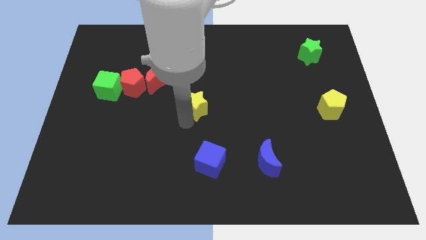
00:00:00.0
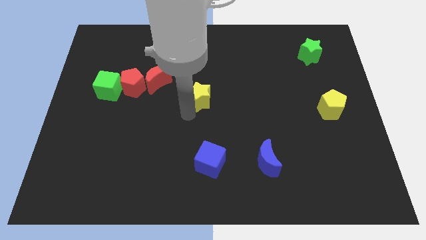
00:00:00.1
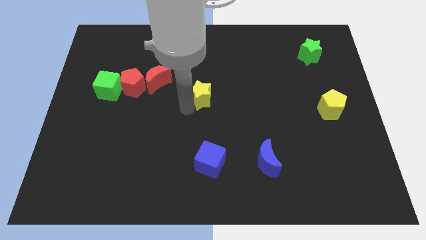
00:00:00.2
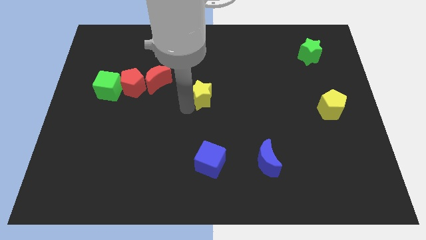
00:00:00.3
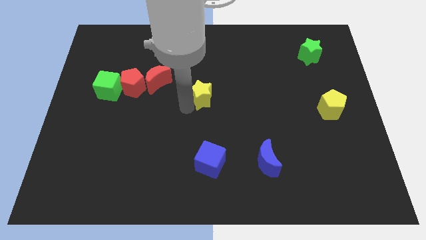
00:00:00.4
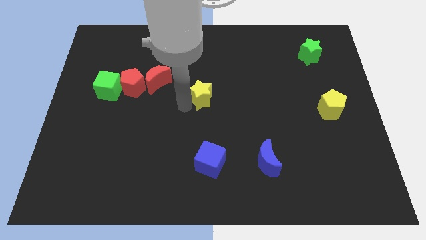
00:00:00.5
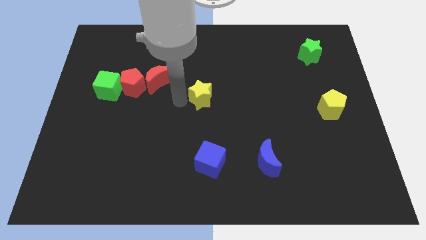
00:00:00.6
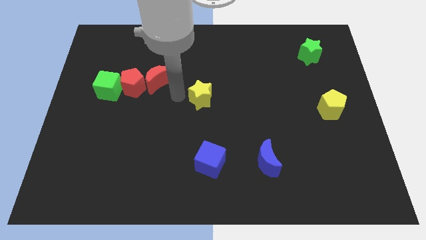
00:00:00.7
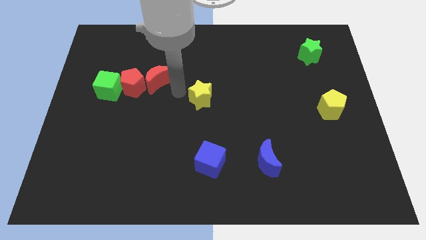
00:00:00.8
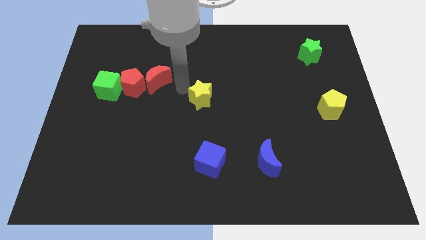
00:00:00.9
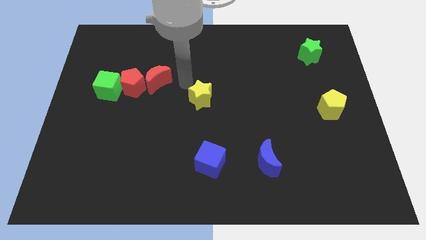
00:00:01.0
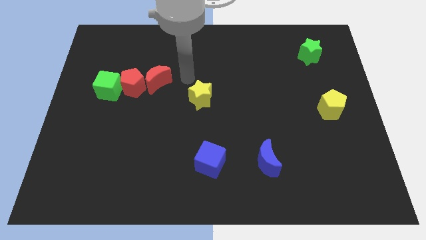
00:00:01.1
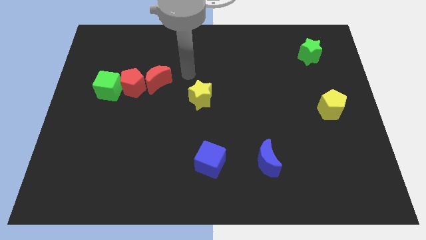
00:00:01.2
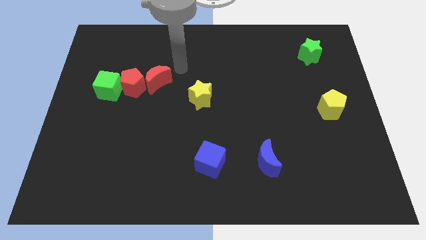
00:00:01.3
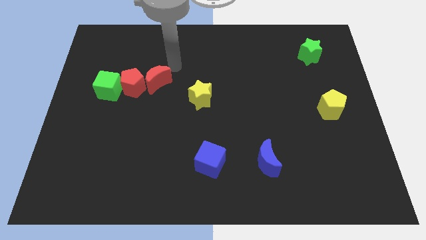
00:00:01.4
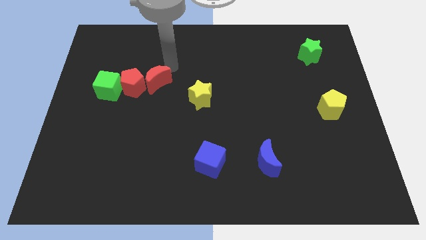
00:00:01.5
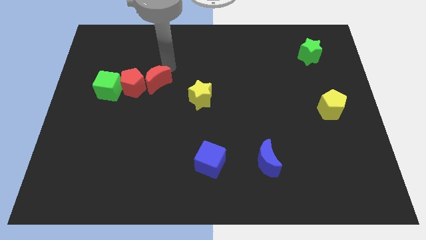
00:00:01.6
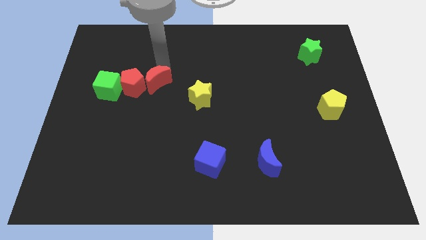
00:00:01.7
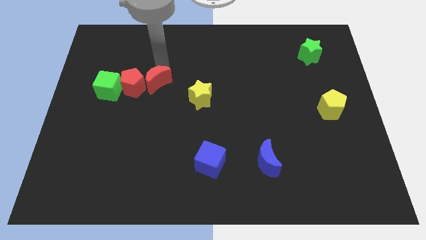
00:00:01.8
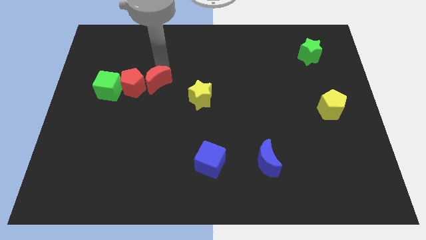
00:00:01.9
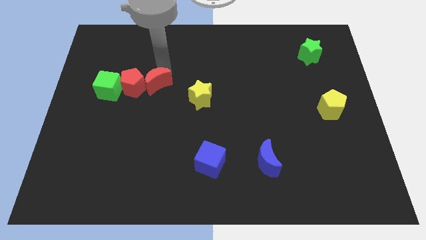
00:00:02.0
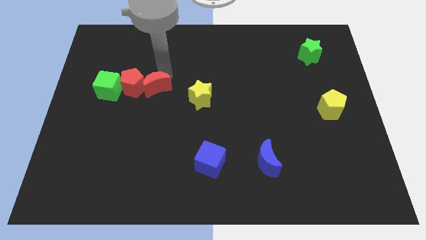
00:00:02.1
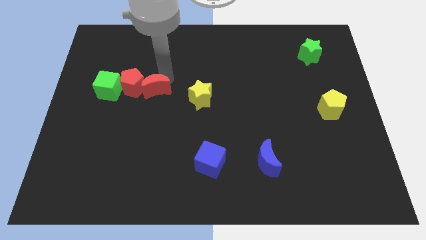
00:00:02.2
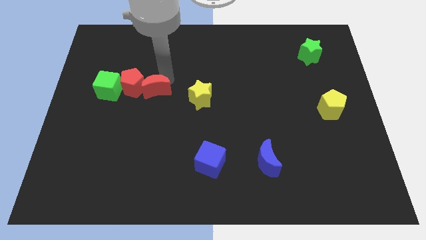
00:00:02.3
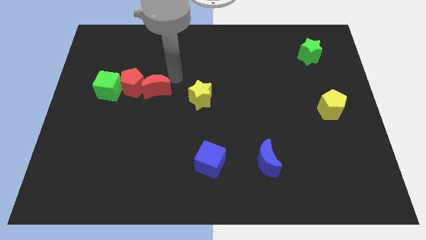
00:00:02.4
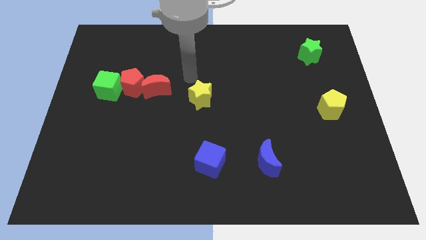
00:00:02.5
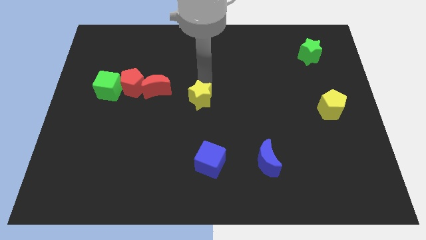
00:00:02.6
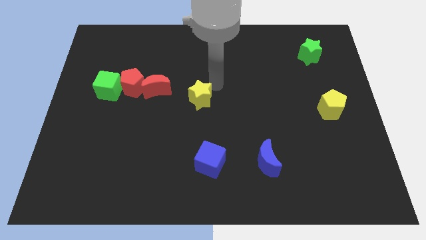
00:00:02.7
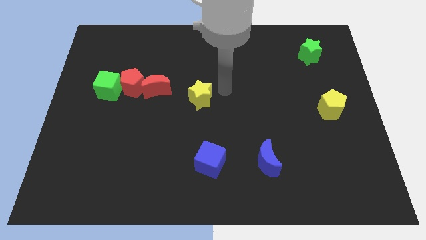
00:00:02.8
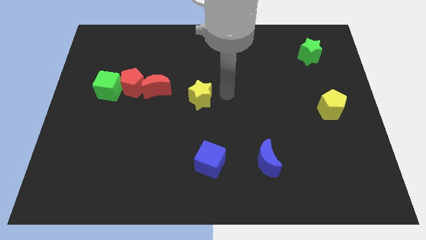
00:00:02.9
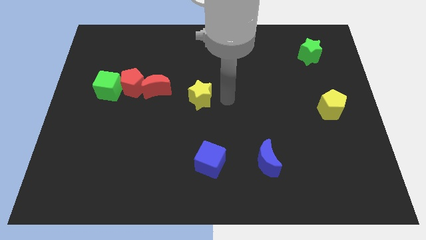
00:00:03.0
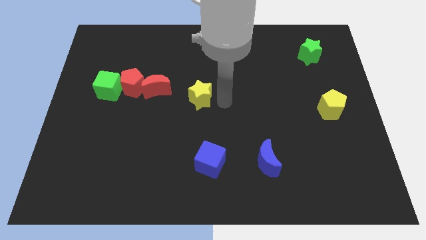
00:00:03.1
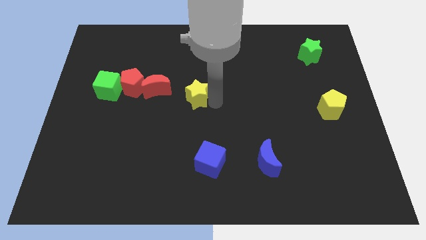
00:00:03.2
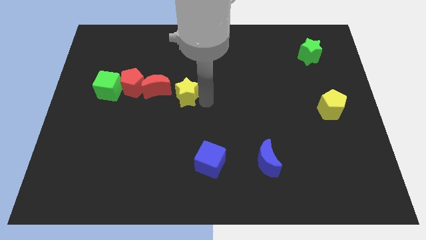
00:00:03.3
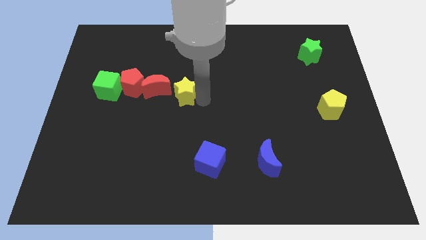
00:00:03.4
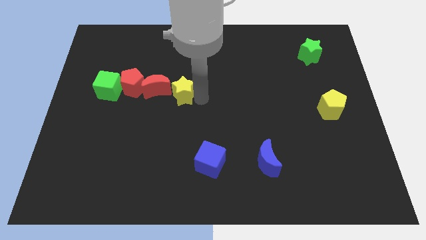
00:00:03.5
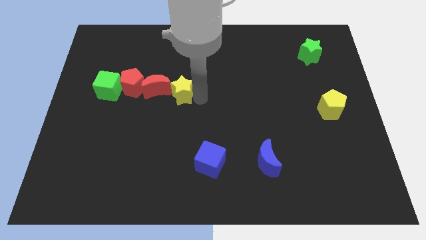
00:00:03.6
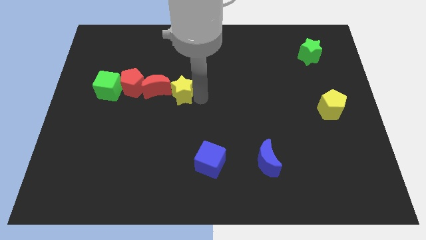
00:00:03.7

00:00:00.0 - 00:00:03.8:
place the yellow star on the right side of the red crescent

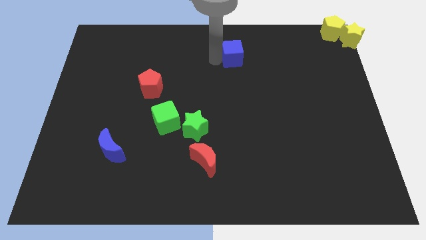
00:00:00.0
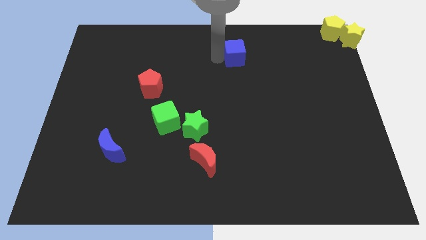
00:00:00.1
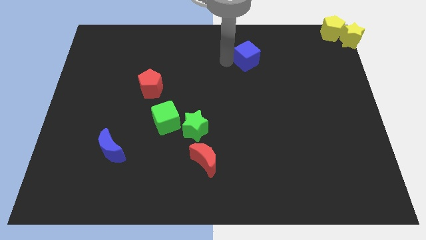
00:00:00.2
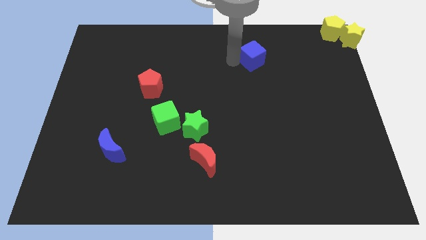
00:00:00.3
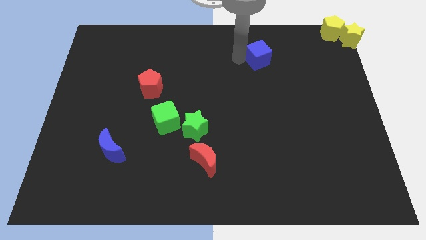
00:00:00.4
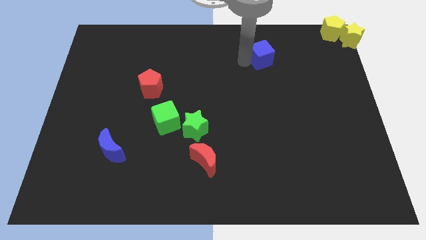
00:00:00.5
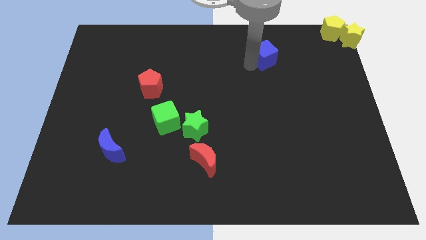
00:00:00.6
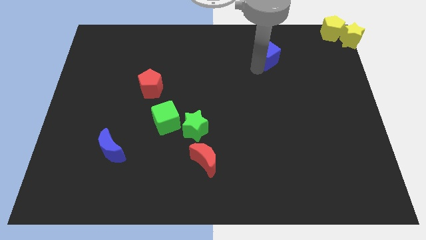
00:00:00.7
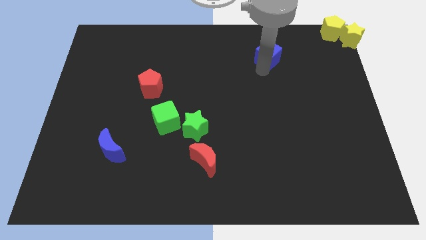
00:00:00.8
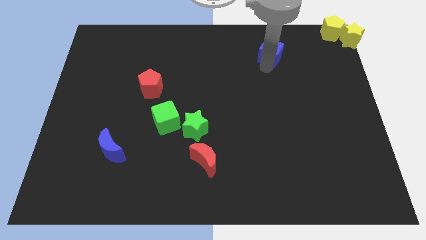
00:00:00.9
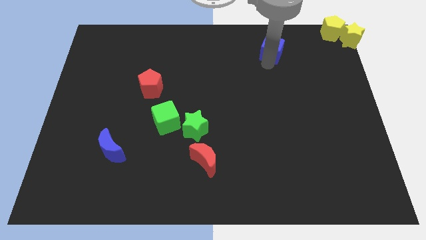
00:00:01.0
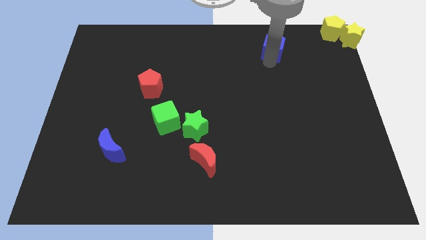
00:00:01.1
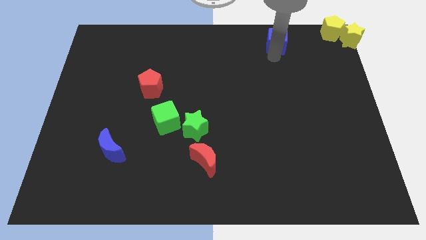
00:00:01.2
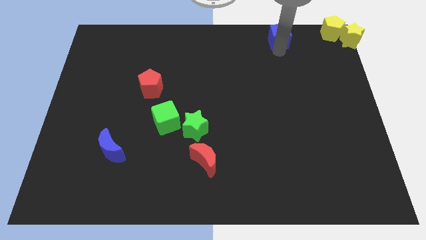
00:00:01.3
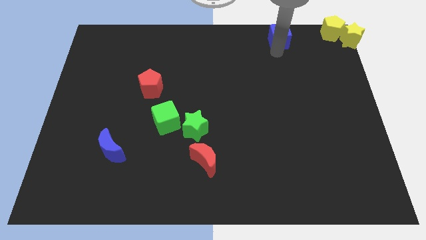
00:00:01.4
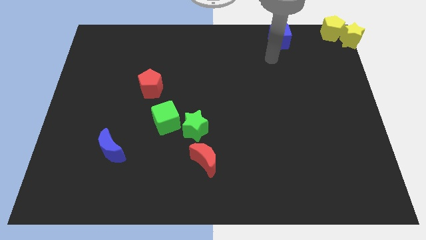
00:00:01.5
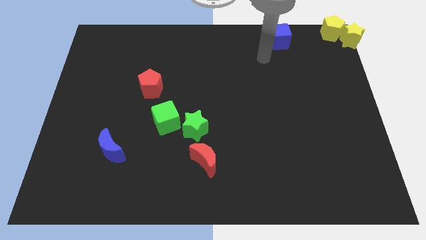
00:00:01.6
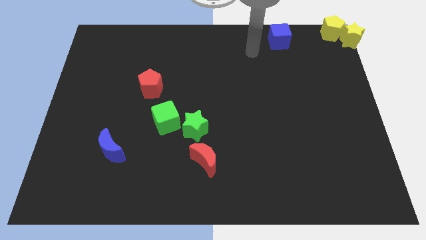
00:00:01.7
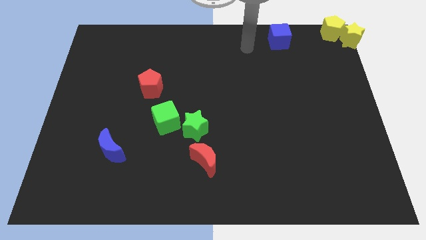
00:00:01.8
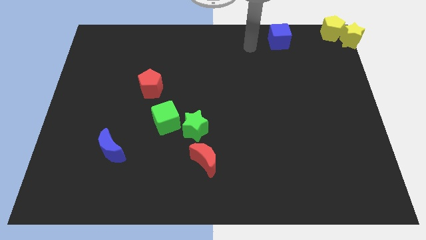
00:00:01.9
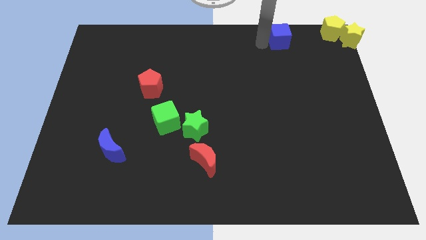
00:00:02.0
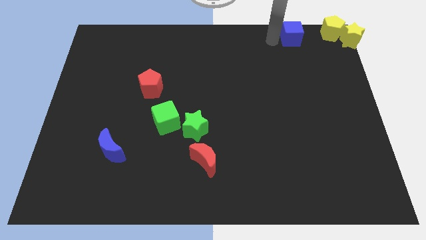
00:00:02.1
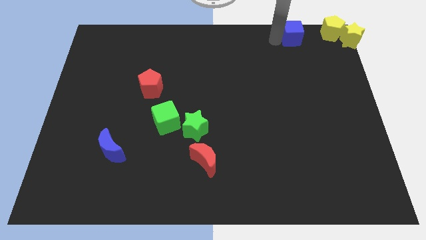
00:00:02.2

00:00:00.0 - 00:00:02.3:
move the blue cube to the left of the yellow pentagon

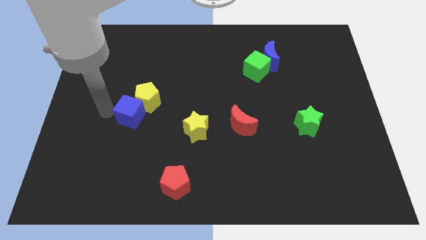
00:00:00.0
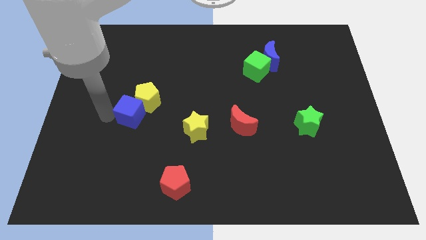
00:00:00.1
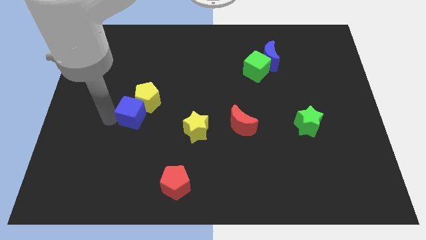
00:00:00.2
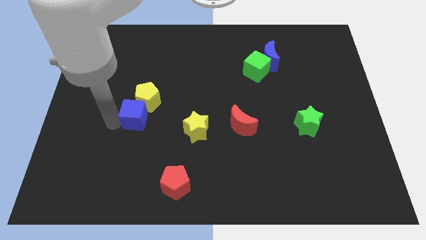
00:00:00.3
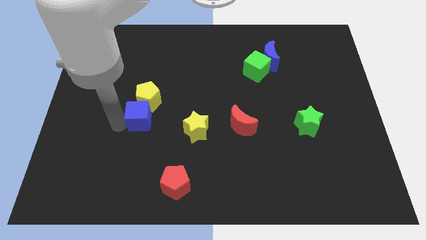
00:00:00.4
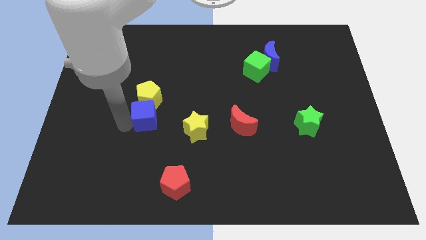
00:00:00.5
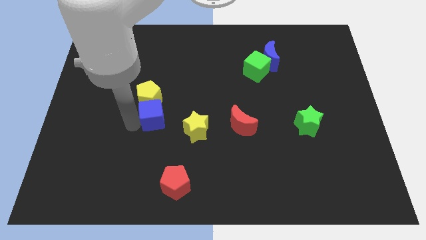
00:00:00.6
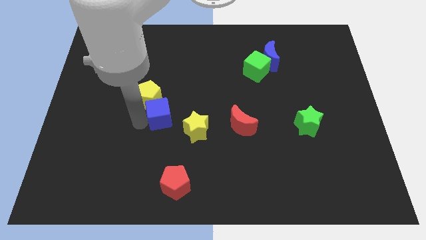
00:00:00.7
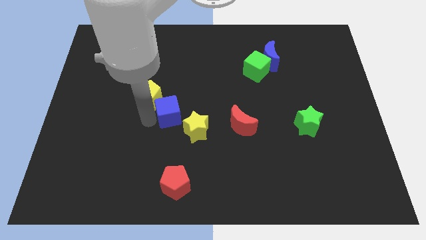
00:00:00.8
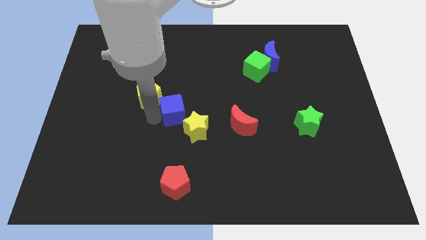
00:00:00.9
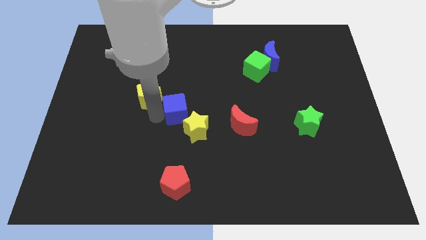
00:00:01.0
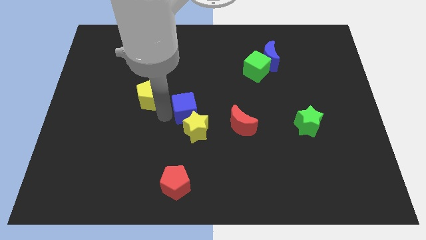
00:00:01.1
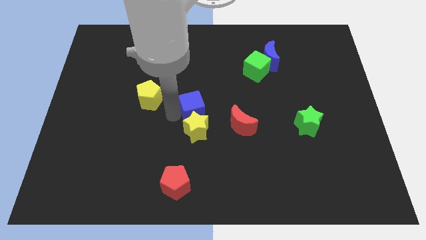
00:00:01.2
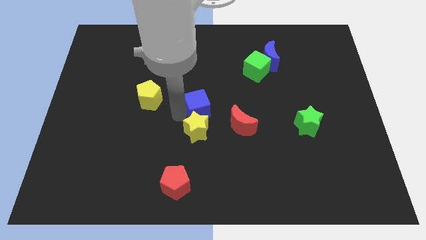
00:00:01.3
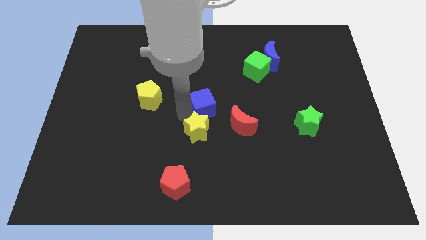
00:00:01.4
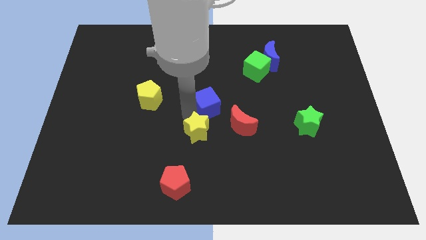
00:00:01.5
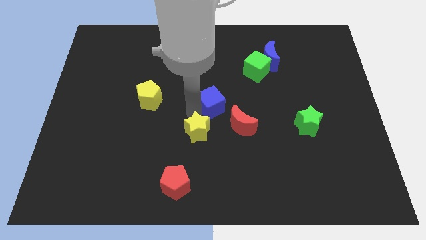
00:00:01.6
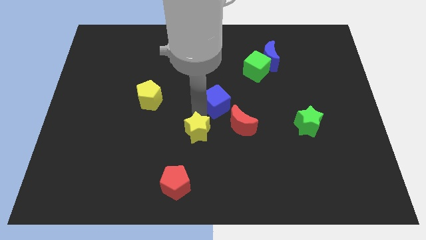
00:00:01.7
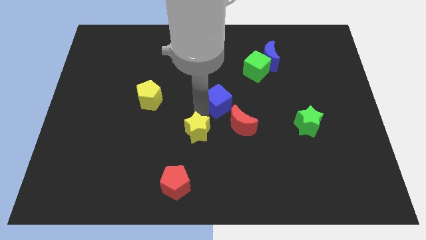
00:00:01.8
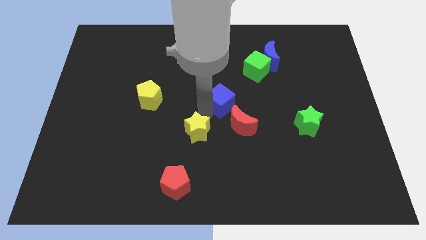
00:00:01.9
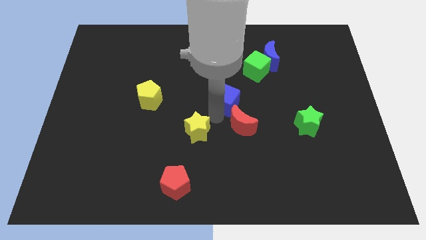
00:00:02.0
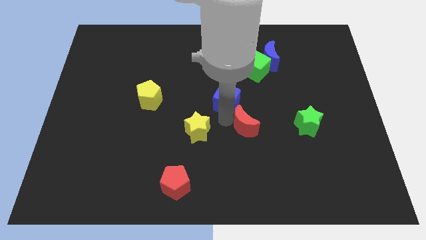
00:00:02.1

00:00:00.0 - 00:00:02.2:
separate blue cube from the yellow pentagon

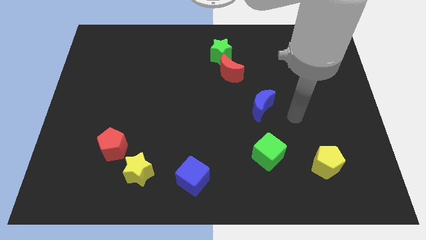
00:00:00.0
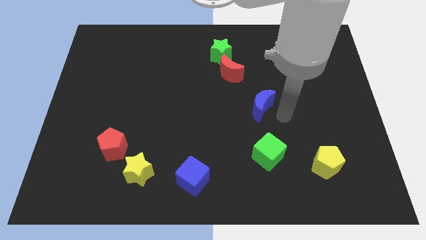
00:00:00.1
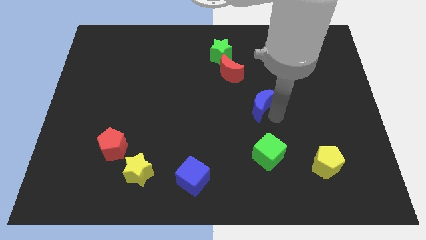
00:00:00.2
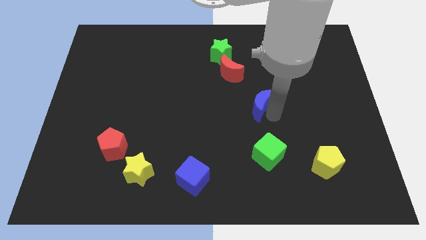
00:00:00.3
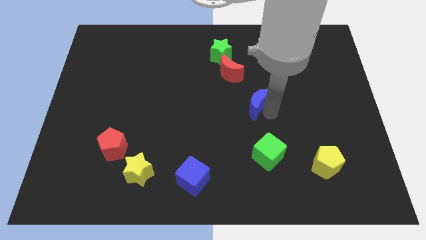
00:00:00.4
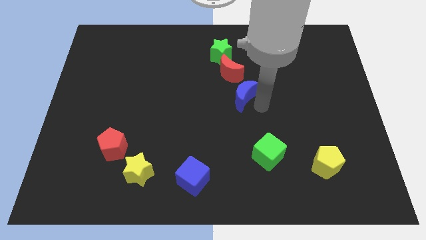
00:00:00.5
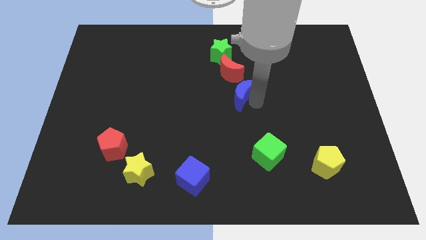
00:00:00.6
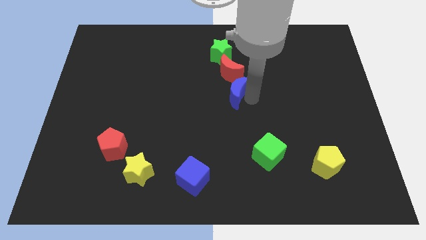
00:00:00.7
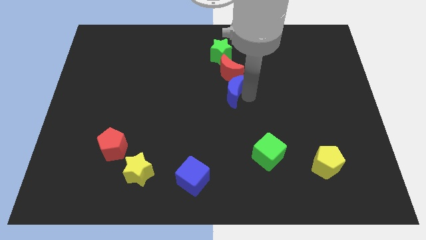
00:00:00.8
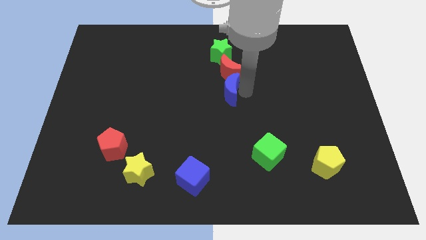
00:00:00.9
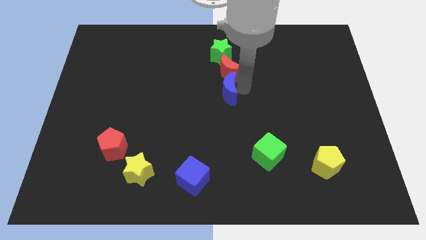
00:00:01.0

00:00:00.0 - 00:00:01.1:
slide blue moon into red moon
